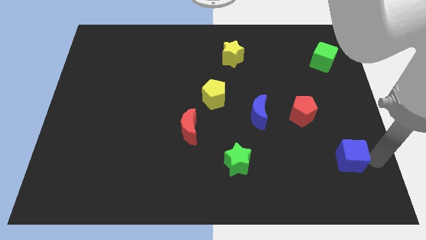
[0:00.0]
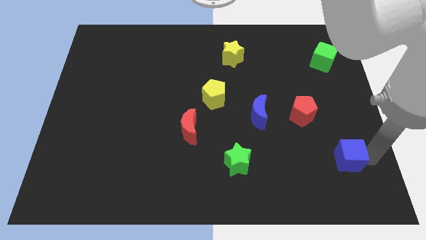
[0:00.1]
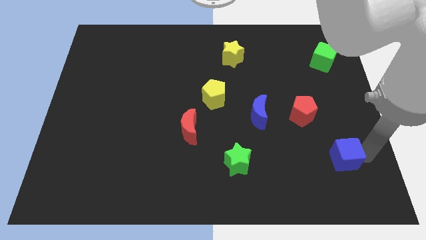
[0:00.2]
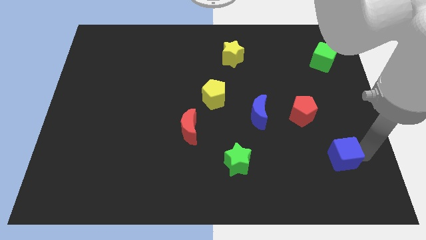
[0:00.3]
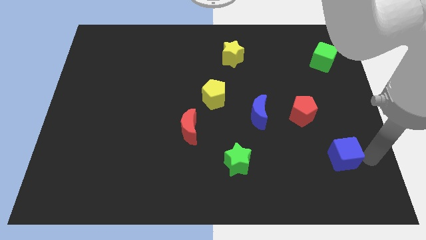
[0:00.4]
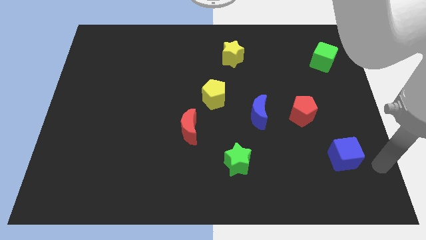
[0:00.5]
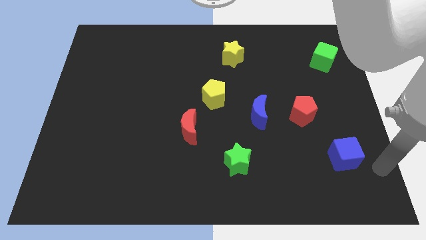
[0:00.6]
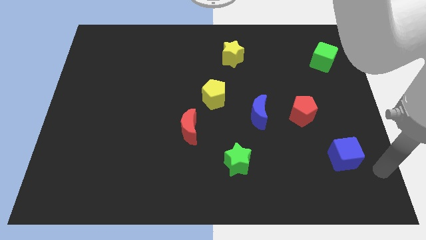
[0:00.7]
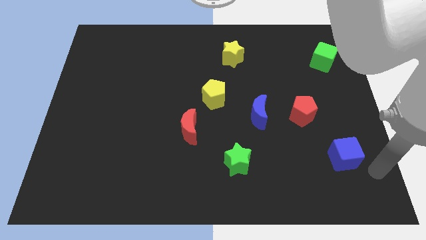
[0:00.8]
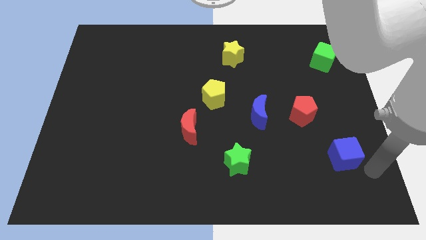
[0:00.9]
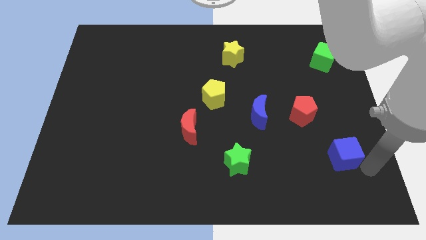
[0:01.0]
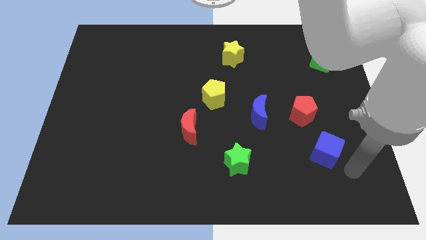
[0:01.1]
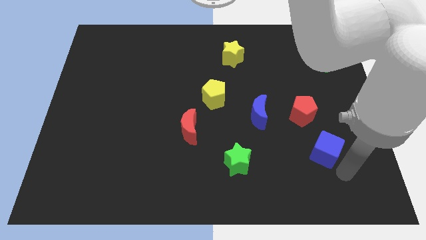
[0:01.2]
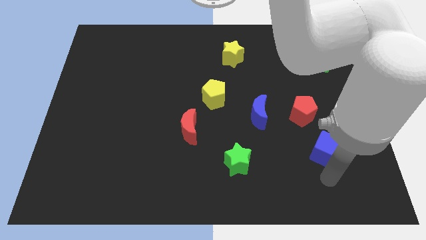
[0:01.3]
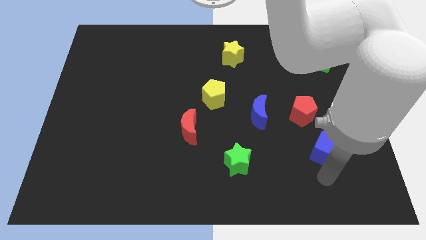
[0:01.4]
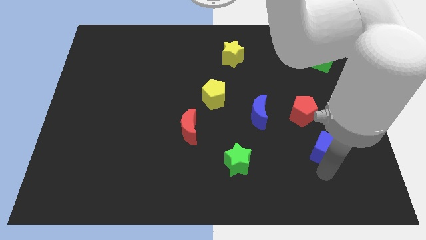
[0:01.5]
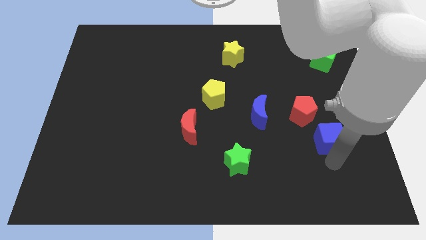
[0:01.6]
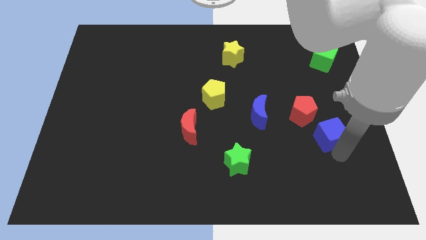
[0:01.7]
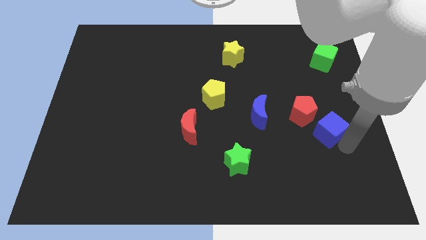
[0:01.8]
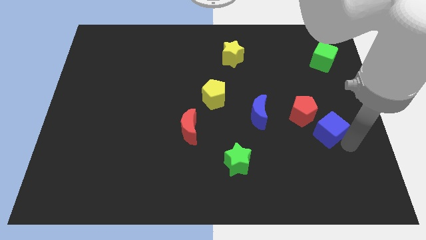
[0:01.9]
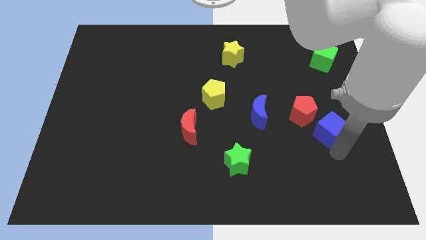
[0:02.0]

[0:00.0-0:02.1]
place the blue cube close to the red pentagon

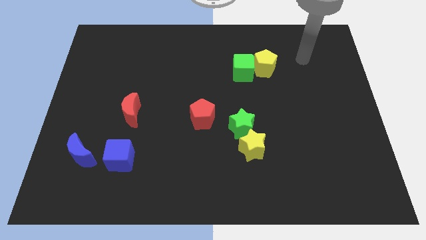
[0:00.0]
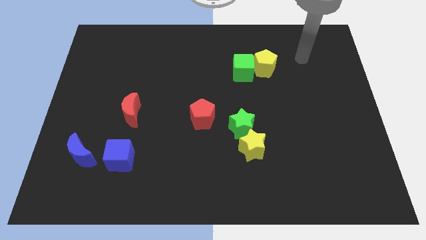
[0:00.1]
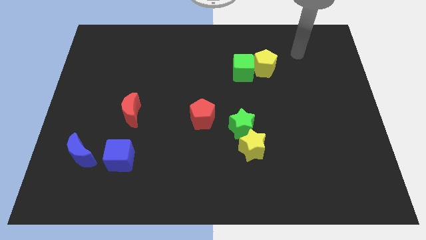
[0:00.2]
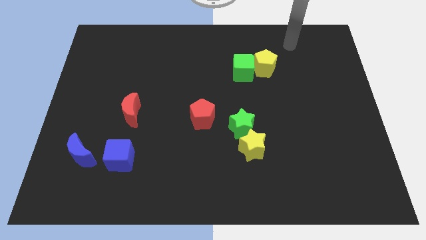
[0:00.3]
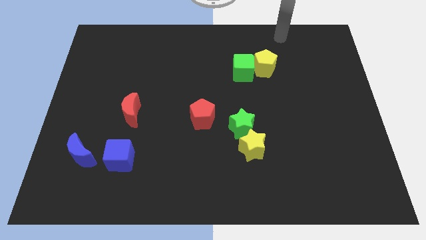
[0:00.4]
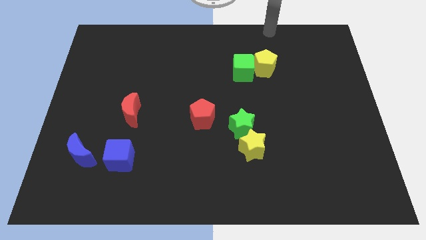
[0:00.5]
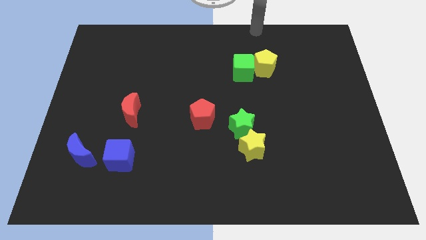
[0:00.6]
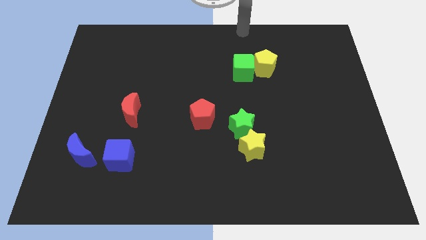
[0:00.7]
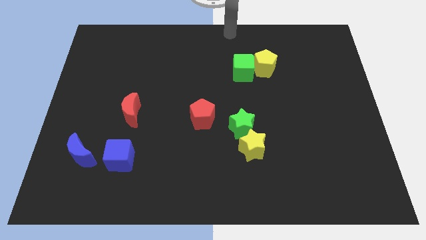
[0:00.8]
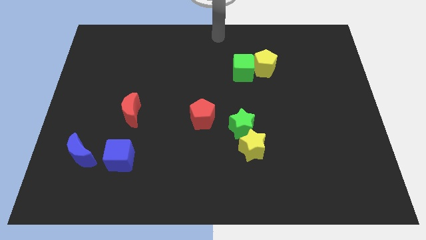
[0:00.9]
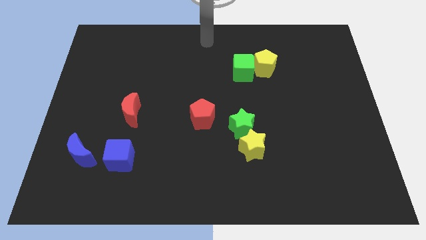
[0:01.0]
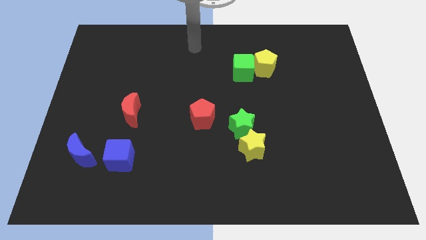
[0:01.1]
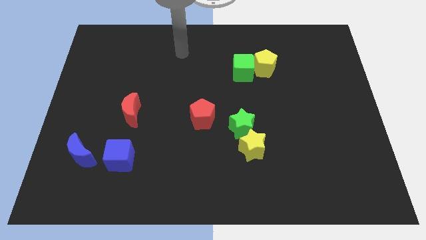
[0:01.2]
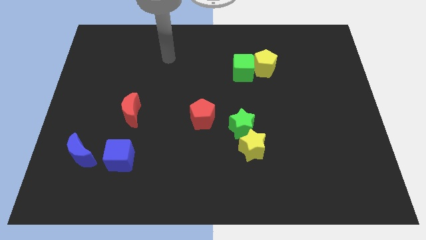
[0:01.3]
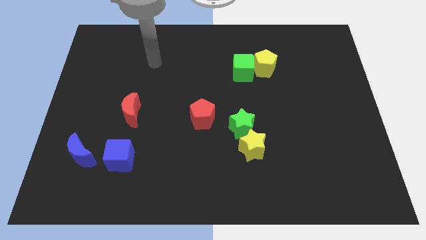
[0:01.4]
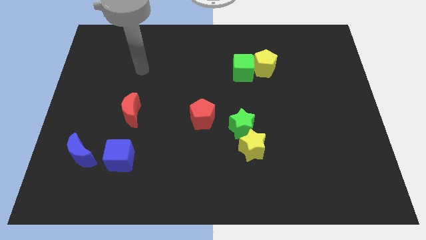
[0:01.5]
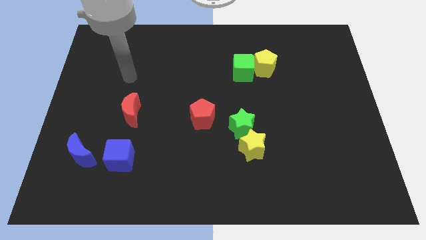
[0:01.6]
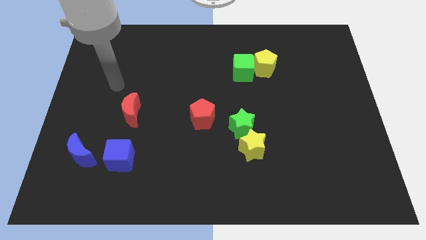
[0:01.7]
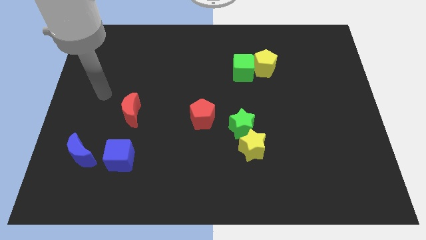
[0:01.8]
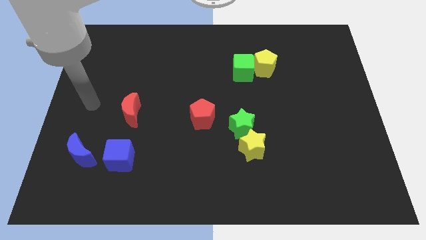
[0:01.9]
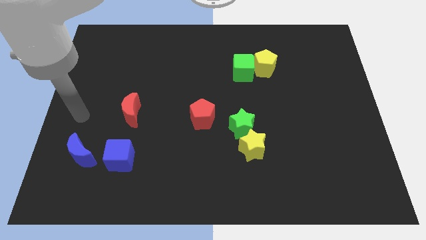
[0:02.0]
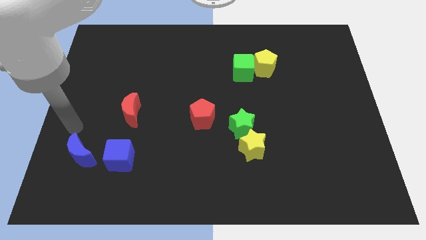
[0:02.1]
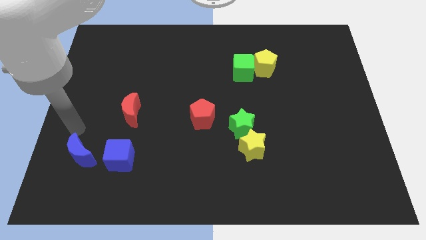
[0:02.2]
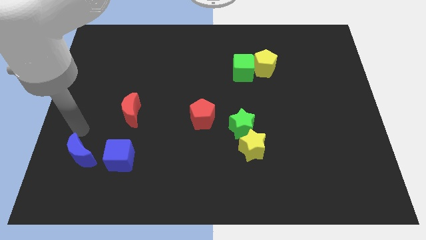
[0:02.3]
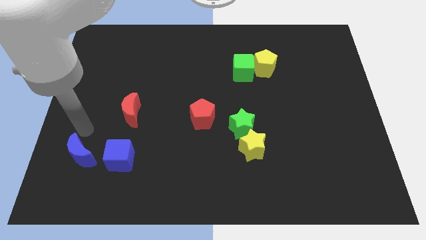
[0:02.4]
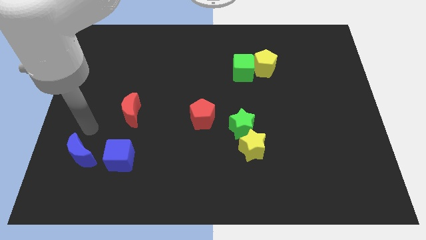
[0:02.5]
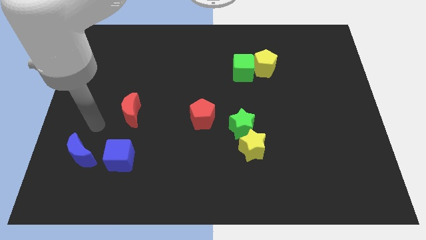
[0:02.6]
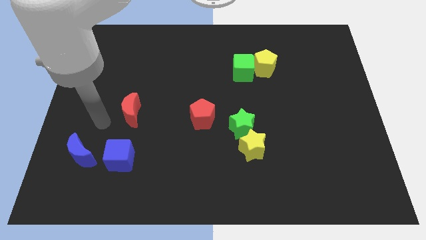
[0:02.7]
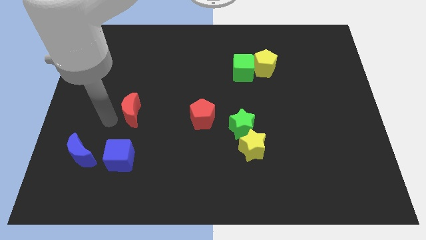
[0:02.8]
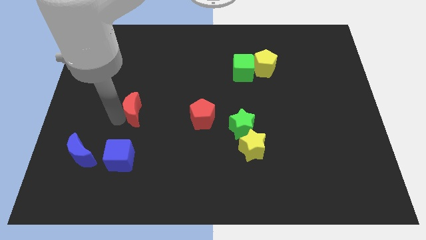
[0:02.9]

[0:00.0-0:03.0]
move your arm towards the red crescent

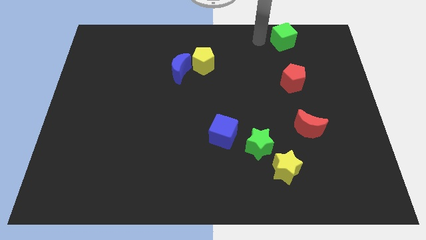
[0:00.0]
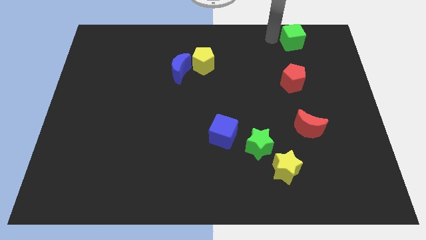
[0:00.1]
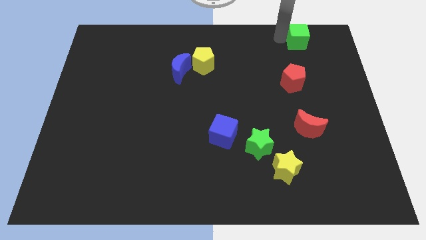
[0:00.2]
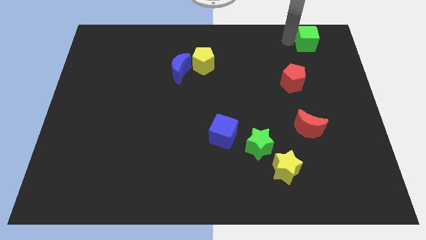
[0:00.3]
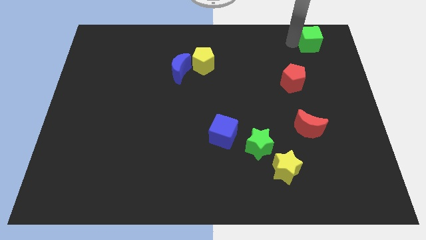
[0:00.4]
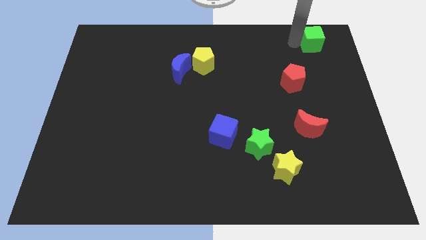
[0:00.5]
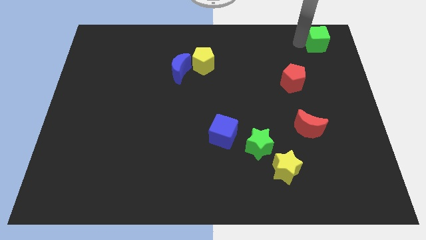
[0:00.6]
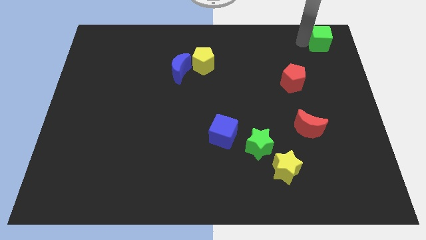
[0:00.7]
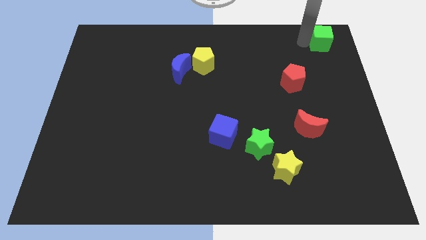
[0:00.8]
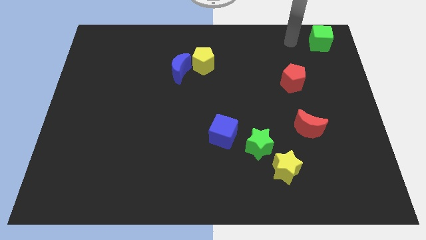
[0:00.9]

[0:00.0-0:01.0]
slide the green cube to the top right

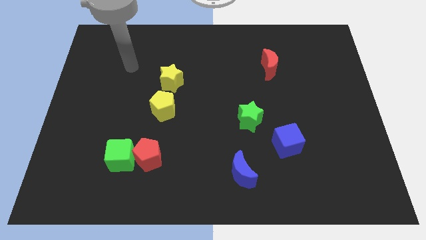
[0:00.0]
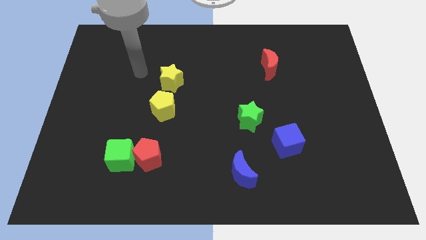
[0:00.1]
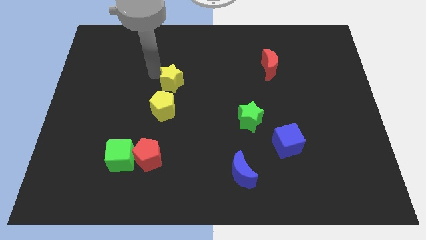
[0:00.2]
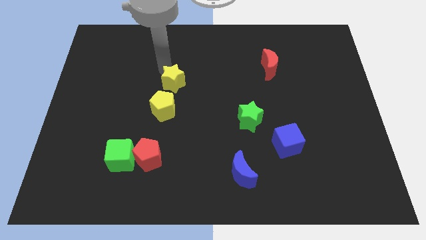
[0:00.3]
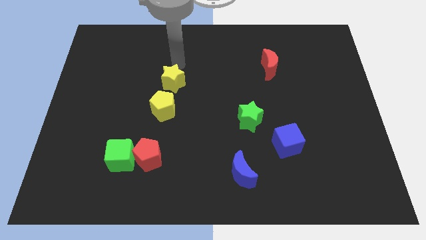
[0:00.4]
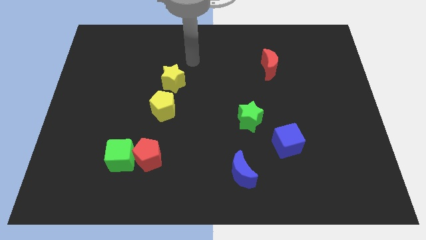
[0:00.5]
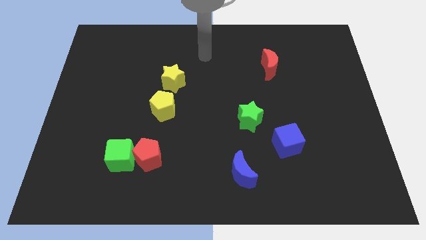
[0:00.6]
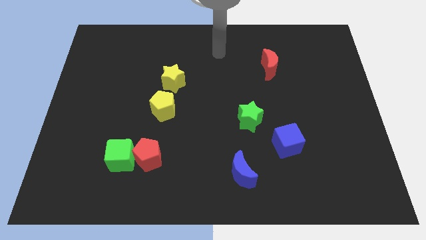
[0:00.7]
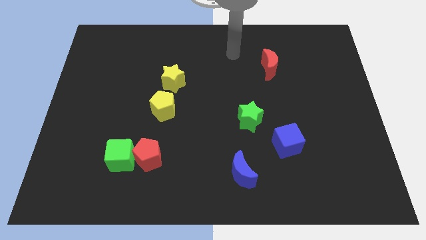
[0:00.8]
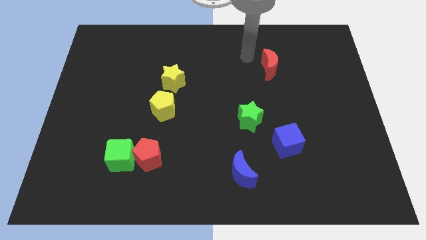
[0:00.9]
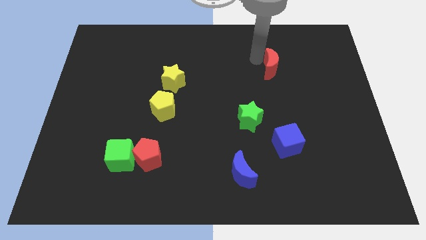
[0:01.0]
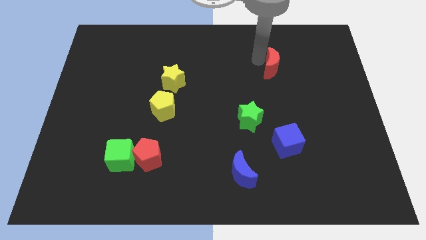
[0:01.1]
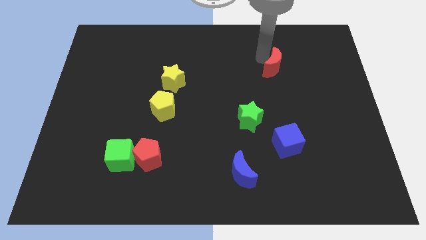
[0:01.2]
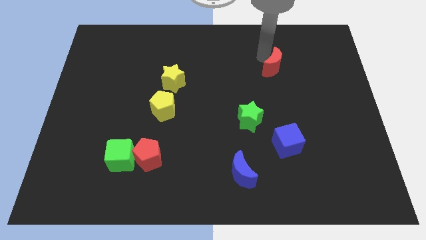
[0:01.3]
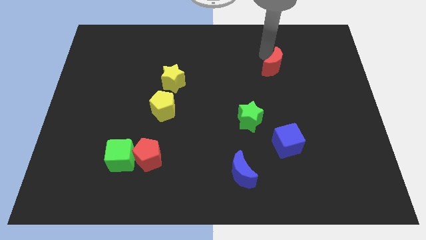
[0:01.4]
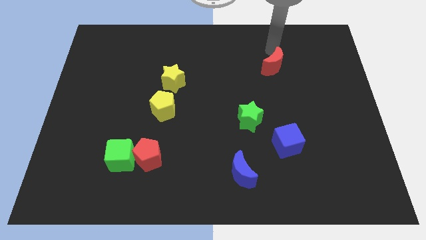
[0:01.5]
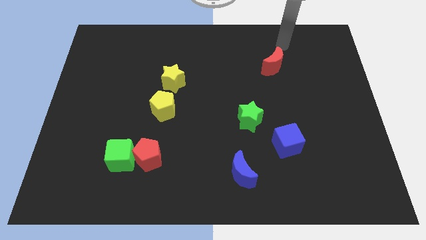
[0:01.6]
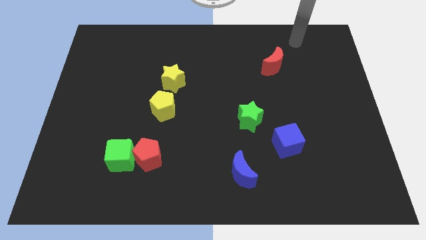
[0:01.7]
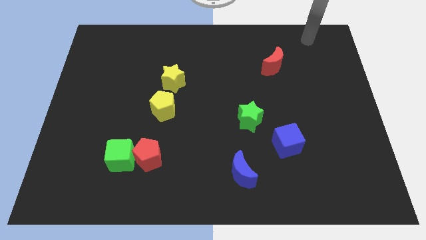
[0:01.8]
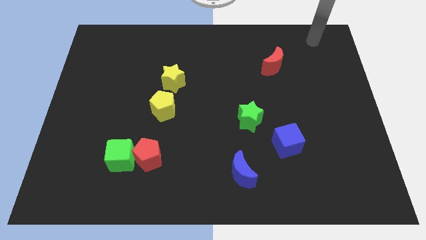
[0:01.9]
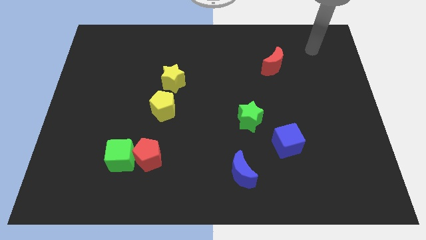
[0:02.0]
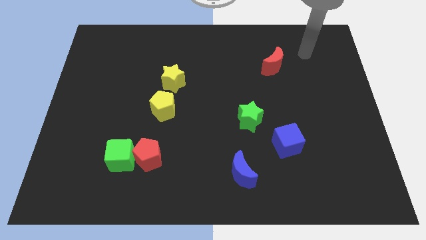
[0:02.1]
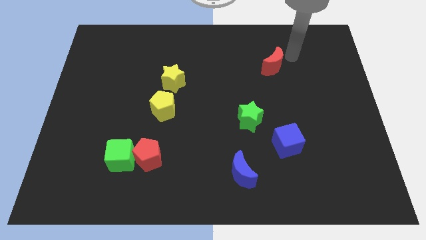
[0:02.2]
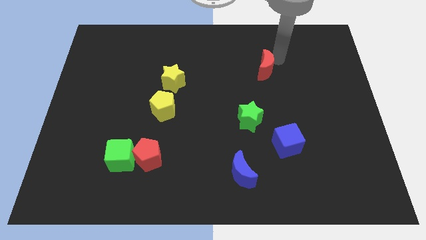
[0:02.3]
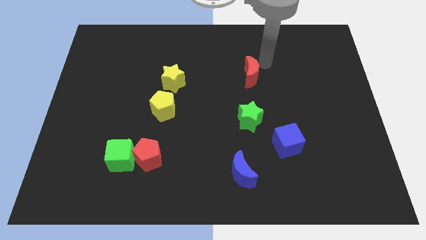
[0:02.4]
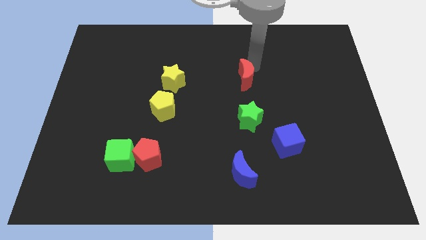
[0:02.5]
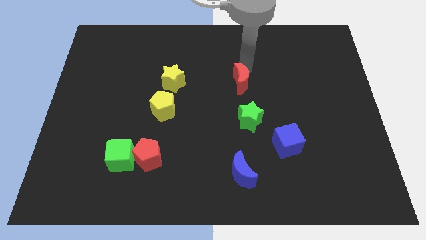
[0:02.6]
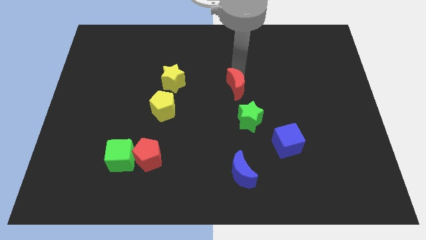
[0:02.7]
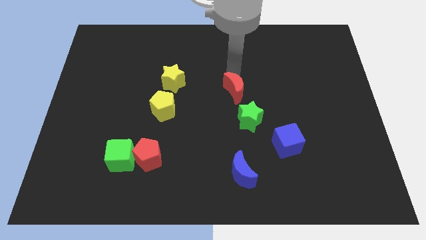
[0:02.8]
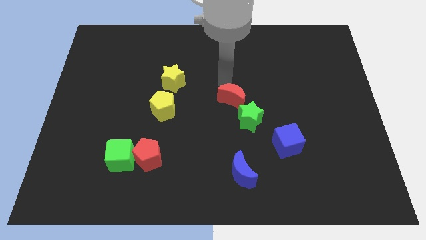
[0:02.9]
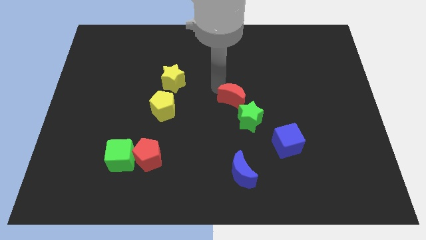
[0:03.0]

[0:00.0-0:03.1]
push the red moon downward
